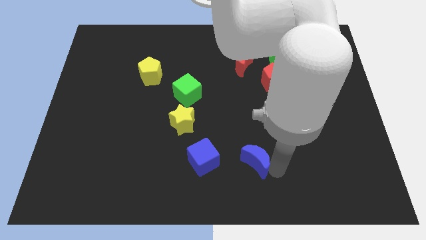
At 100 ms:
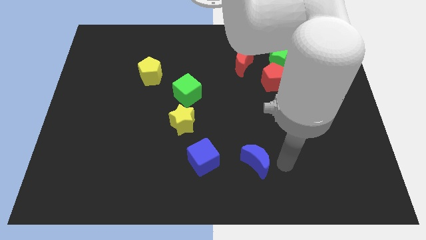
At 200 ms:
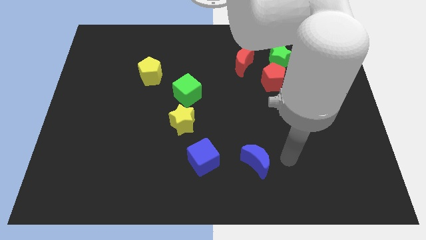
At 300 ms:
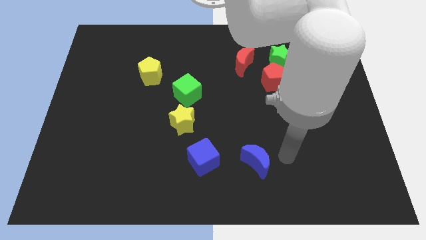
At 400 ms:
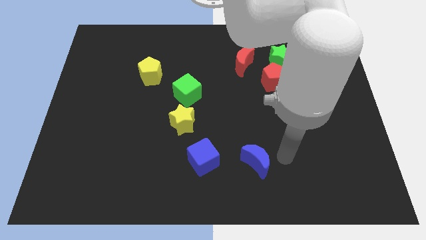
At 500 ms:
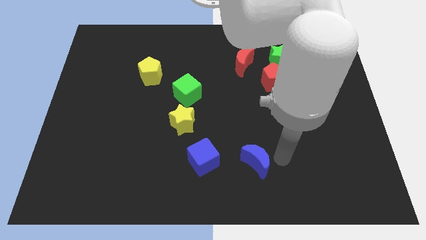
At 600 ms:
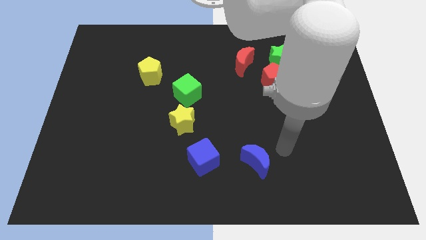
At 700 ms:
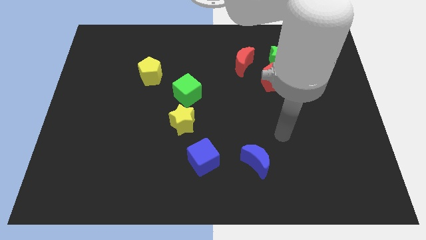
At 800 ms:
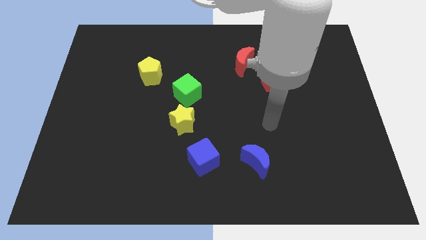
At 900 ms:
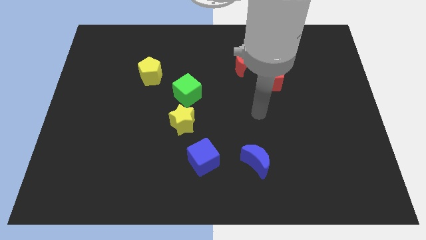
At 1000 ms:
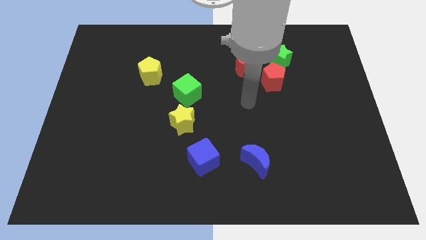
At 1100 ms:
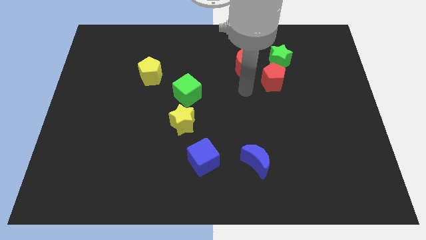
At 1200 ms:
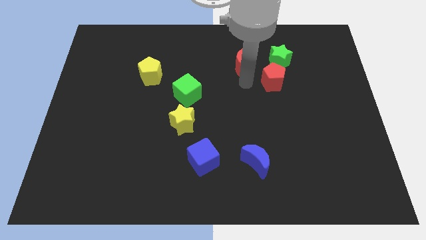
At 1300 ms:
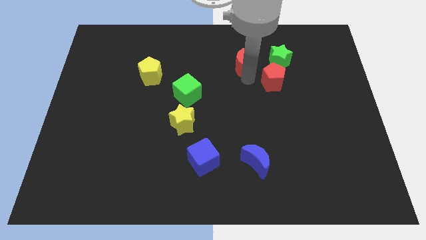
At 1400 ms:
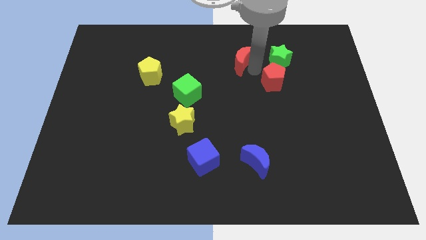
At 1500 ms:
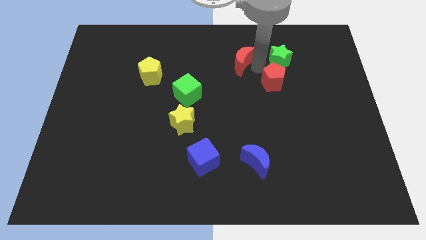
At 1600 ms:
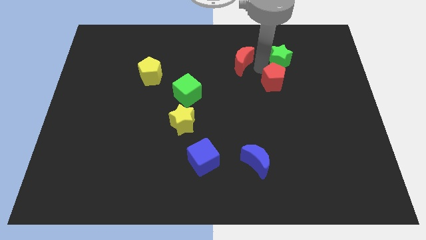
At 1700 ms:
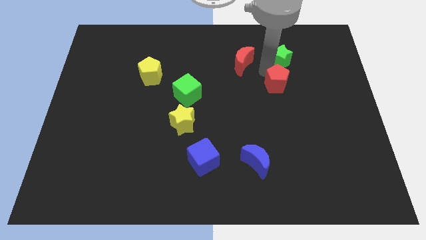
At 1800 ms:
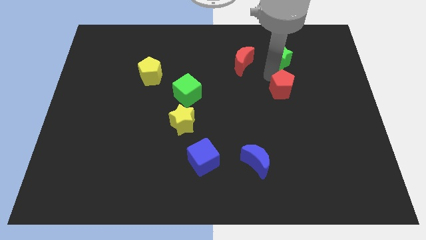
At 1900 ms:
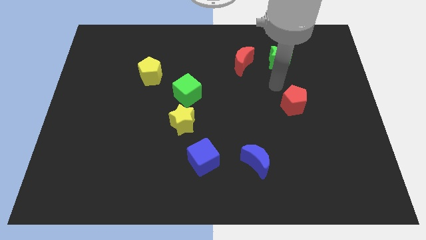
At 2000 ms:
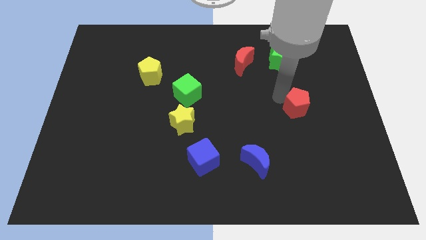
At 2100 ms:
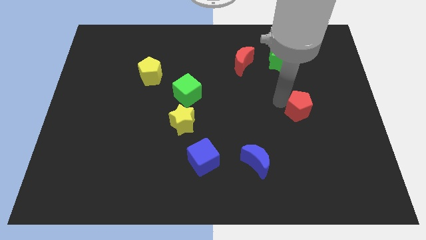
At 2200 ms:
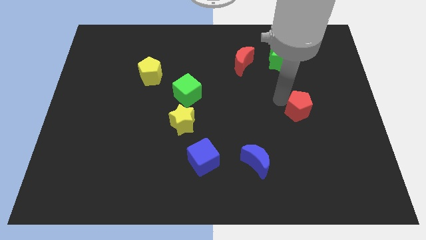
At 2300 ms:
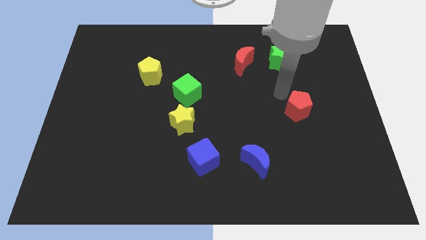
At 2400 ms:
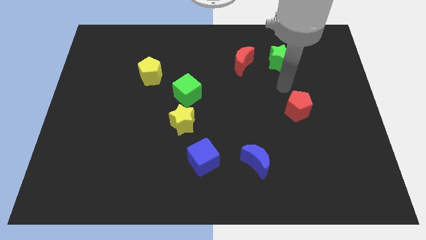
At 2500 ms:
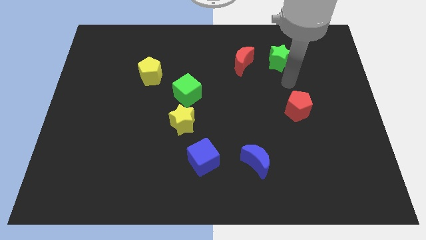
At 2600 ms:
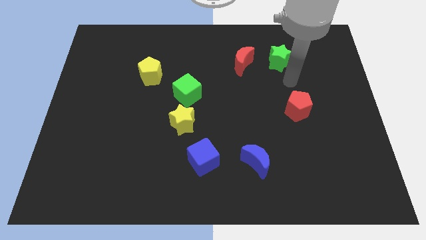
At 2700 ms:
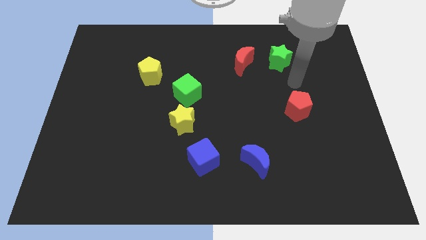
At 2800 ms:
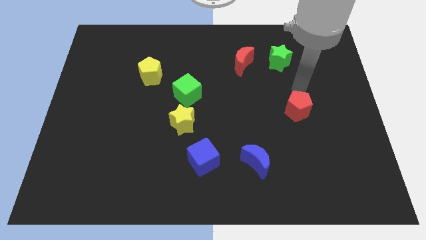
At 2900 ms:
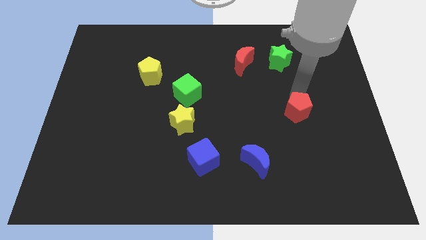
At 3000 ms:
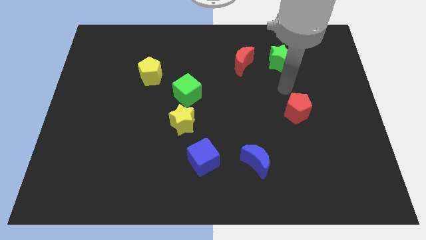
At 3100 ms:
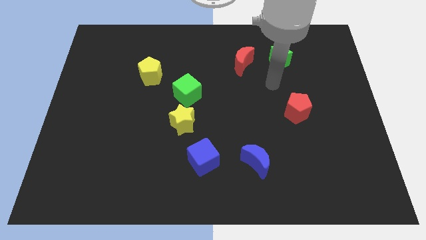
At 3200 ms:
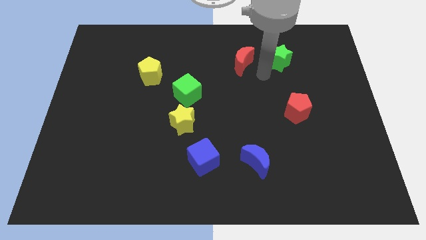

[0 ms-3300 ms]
move the red pentagon to the right of the yellow star

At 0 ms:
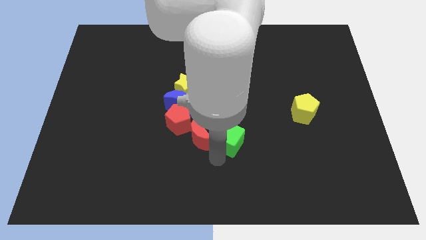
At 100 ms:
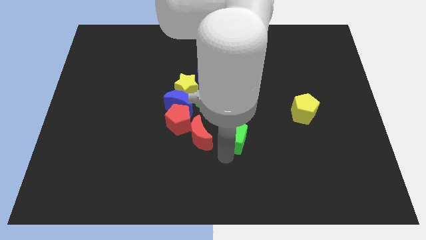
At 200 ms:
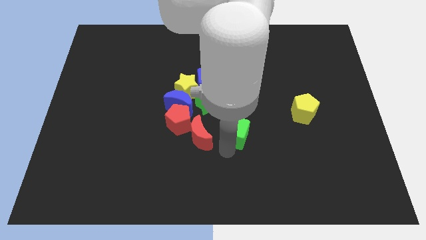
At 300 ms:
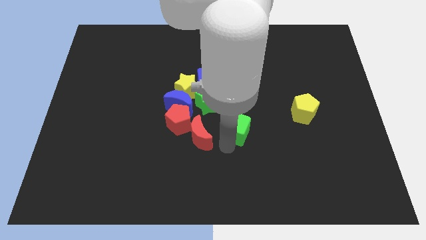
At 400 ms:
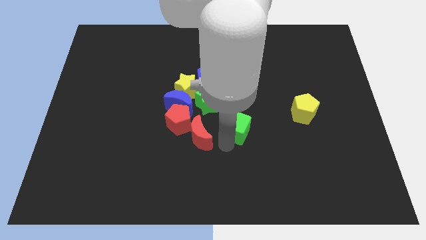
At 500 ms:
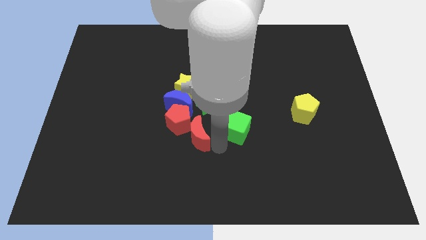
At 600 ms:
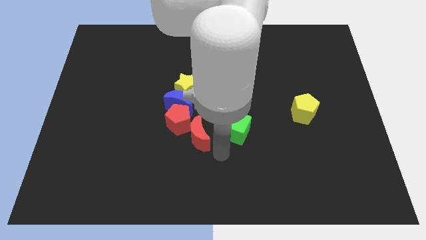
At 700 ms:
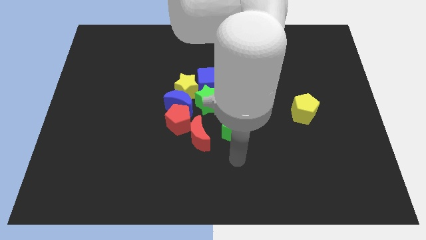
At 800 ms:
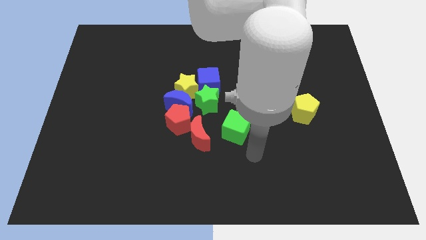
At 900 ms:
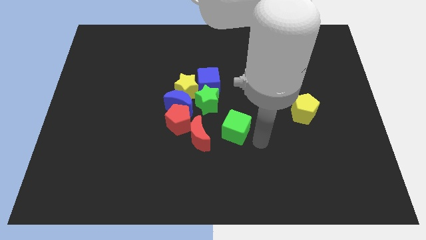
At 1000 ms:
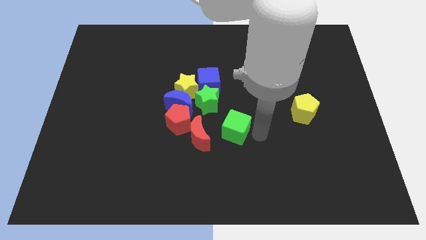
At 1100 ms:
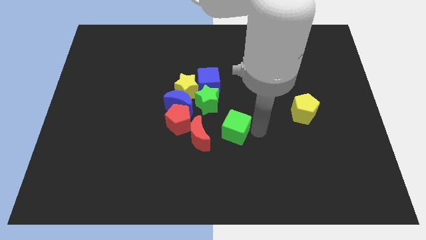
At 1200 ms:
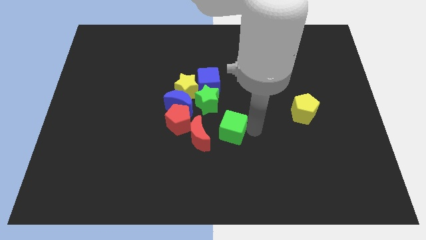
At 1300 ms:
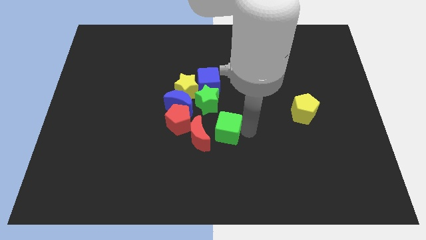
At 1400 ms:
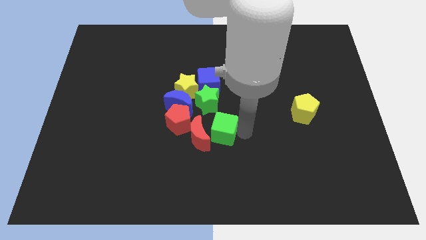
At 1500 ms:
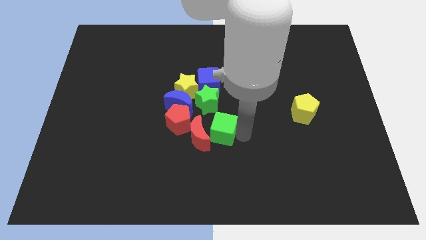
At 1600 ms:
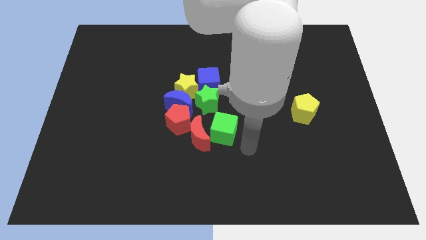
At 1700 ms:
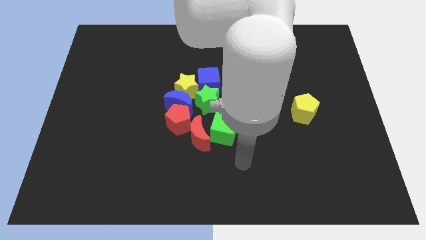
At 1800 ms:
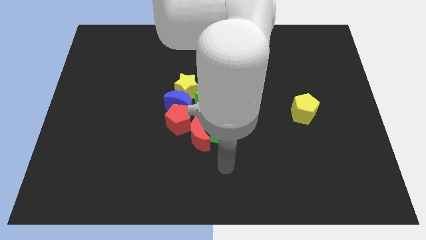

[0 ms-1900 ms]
push green cube slightly upward

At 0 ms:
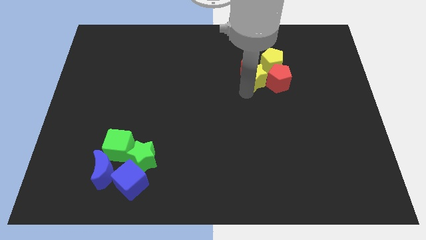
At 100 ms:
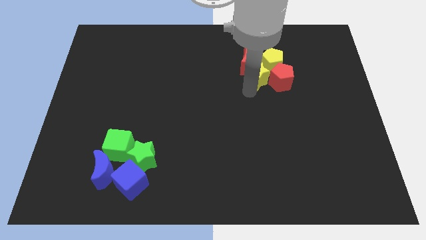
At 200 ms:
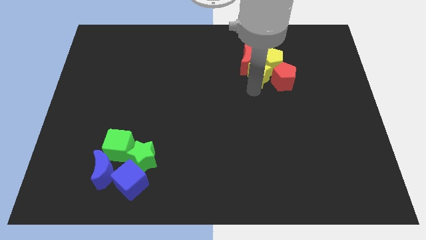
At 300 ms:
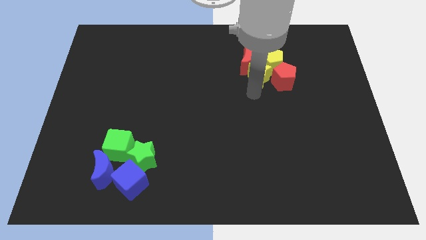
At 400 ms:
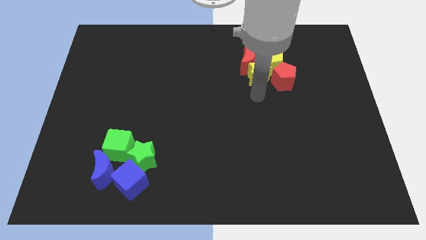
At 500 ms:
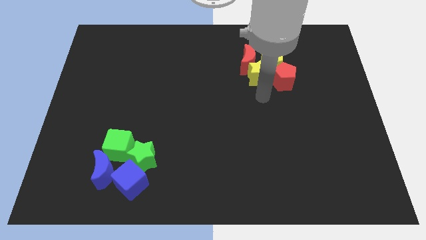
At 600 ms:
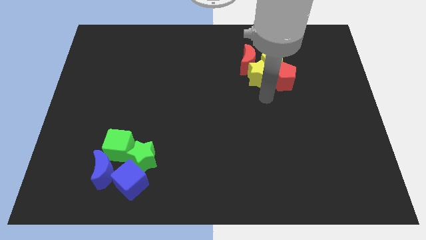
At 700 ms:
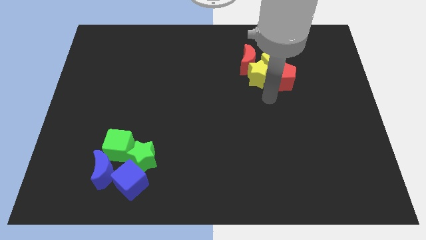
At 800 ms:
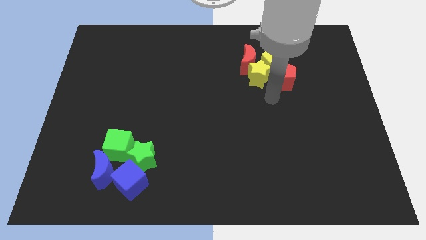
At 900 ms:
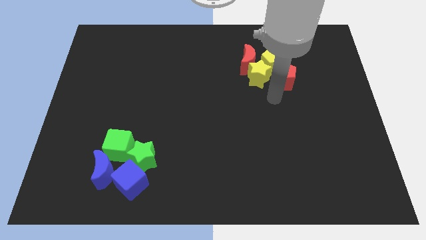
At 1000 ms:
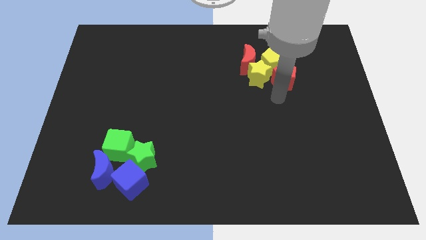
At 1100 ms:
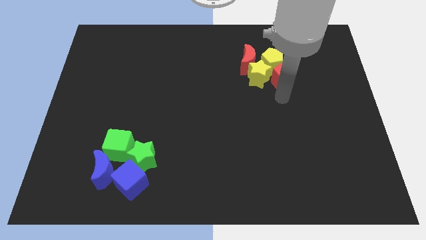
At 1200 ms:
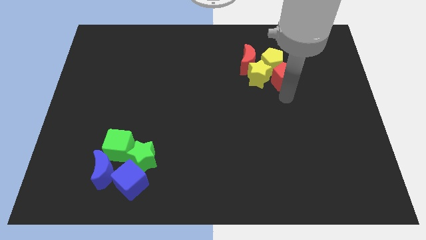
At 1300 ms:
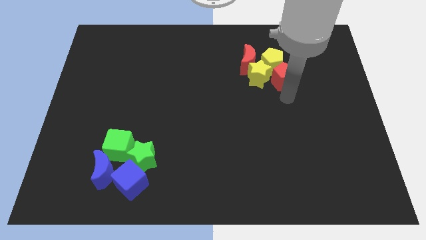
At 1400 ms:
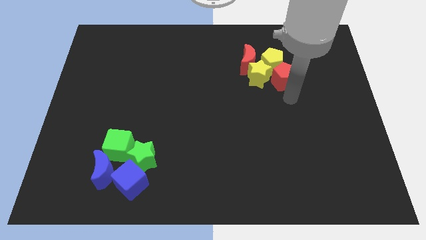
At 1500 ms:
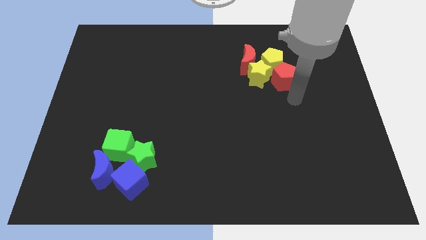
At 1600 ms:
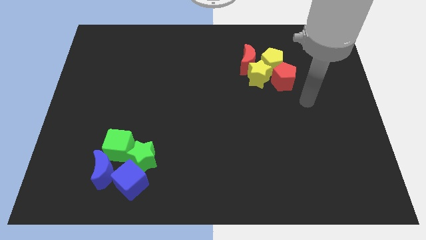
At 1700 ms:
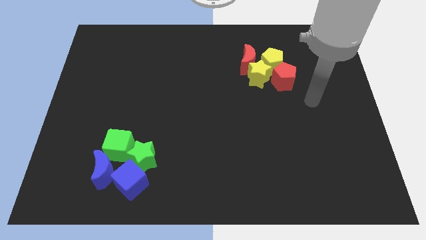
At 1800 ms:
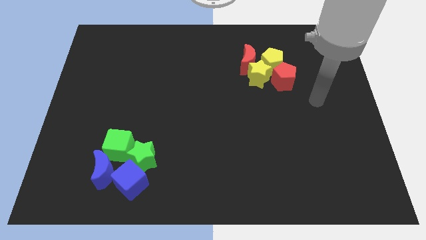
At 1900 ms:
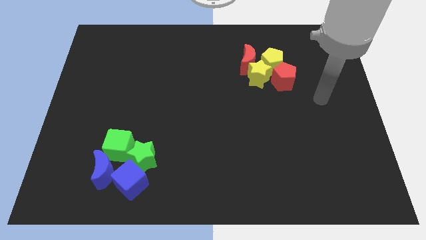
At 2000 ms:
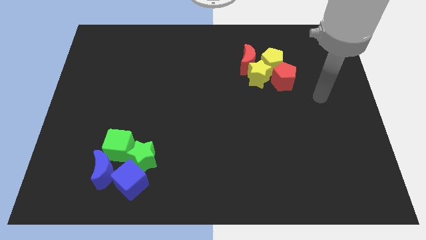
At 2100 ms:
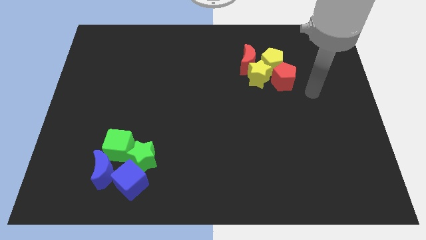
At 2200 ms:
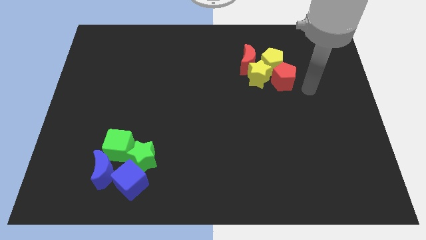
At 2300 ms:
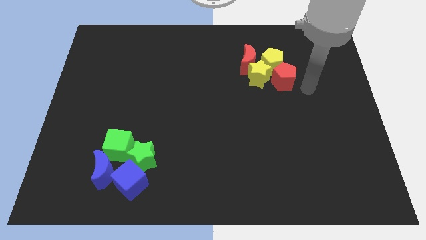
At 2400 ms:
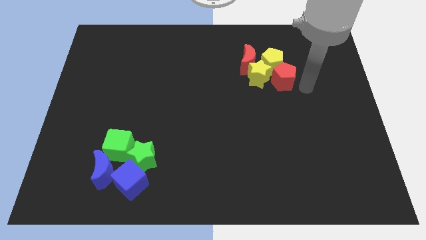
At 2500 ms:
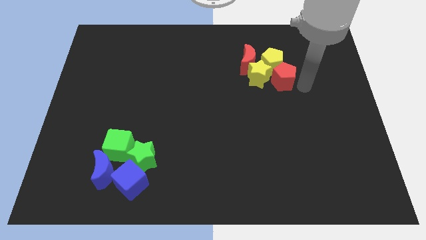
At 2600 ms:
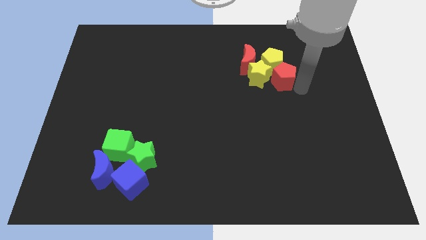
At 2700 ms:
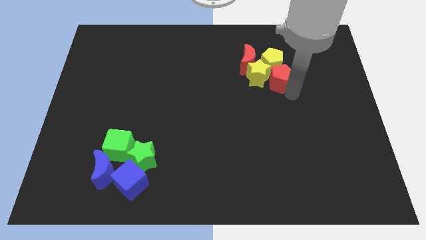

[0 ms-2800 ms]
go and stand to the right of red pentagon

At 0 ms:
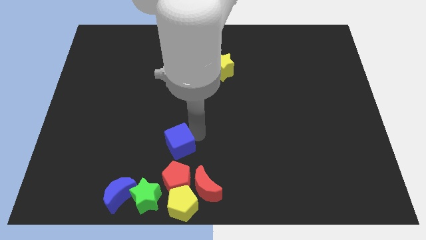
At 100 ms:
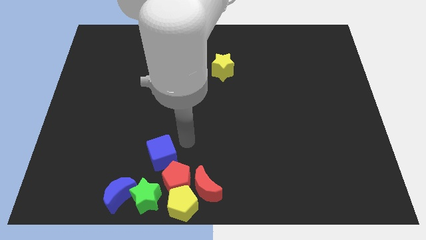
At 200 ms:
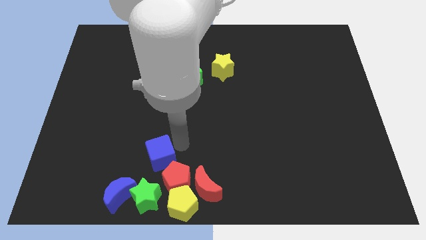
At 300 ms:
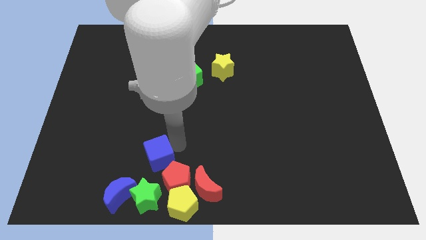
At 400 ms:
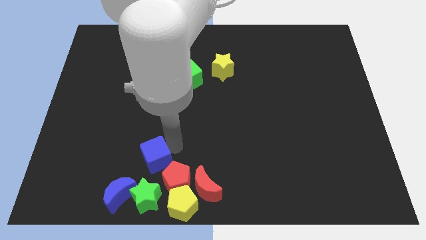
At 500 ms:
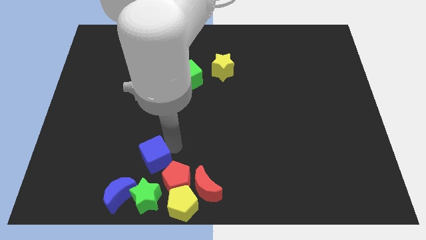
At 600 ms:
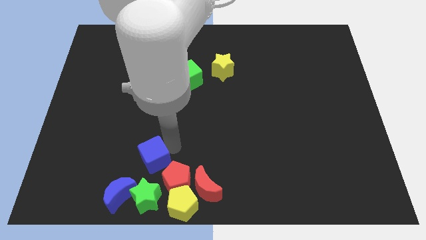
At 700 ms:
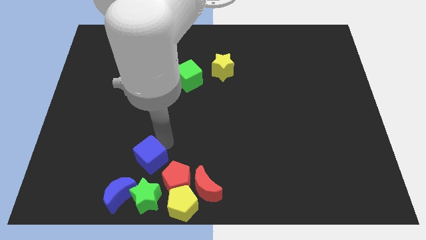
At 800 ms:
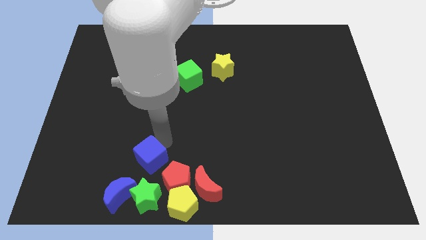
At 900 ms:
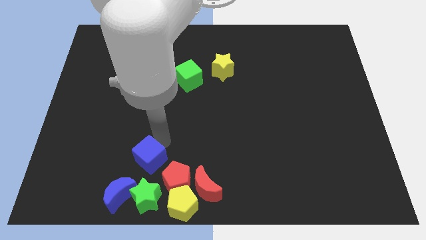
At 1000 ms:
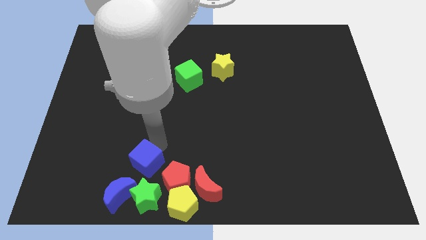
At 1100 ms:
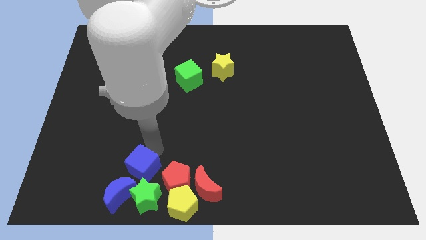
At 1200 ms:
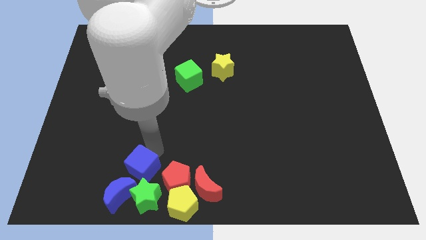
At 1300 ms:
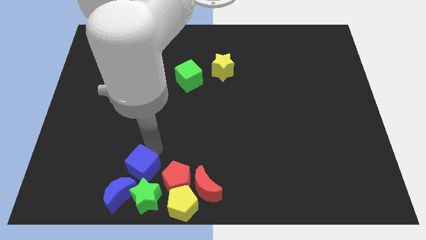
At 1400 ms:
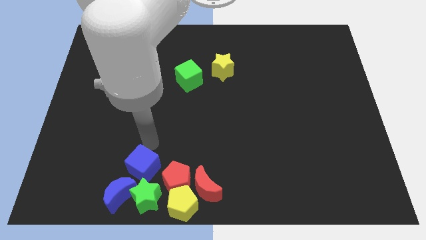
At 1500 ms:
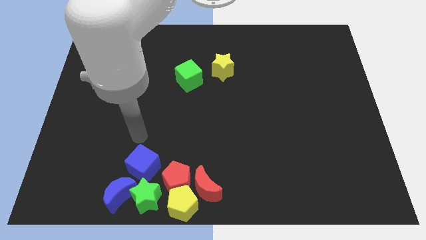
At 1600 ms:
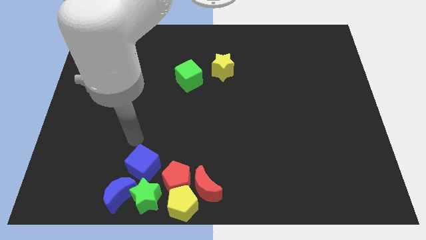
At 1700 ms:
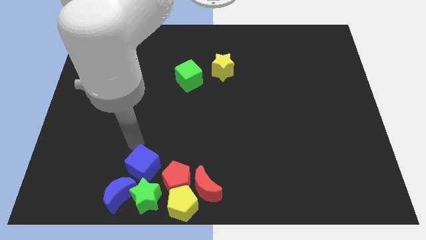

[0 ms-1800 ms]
move the blue cube above the green star
